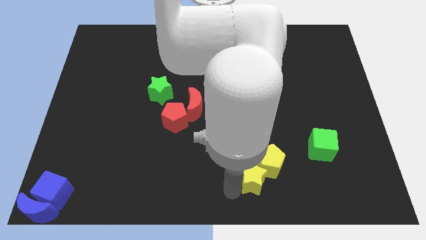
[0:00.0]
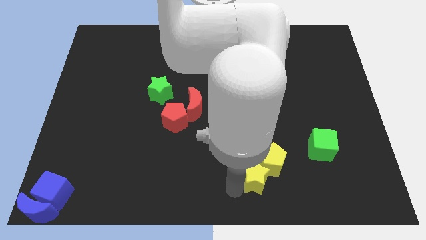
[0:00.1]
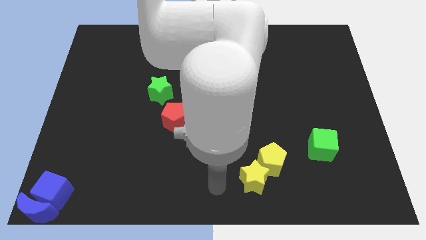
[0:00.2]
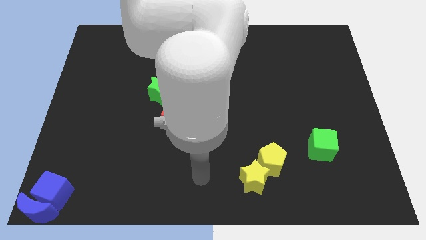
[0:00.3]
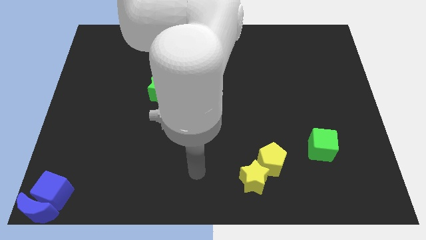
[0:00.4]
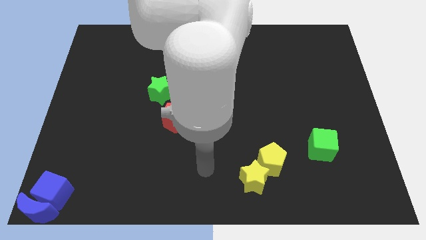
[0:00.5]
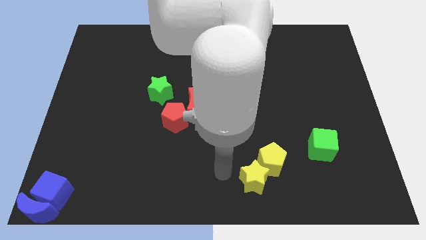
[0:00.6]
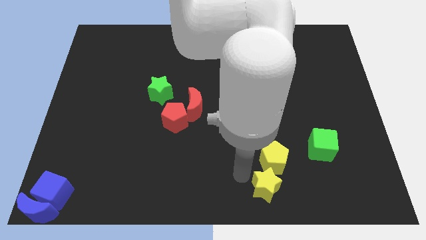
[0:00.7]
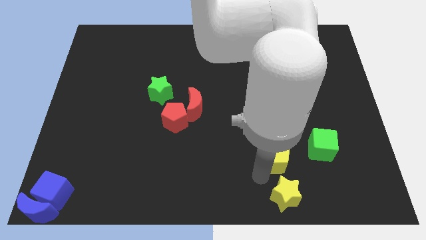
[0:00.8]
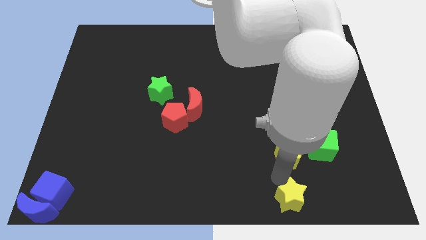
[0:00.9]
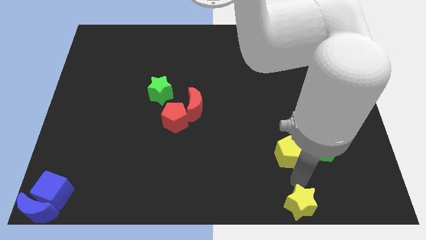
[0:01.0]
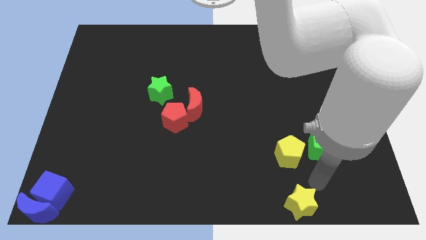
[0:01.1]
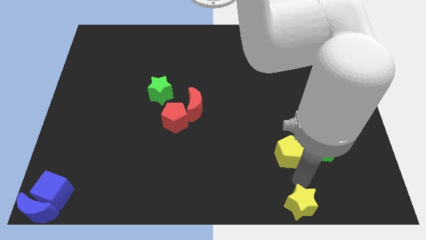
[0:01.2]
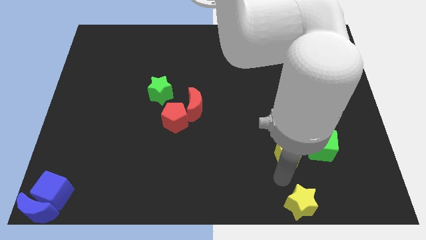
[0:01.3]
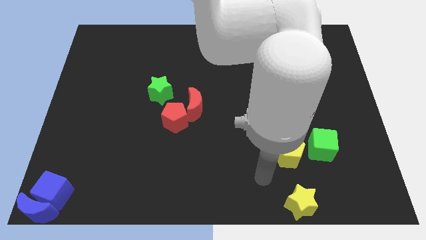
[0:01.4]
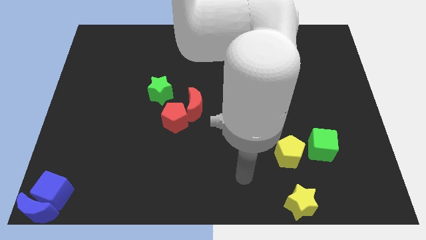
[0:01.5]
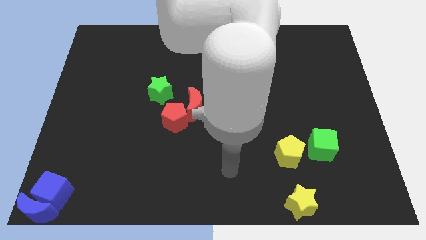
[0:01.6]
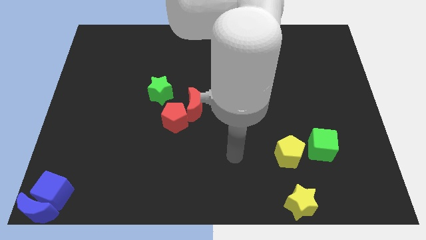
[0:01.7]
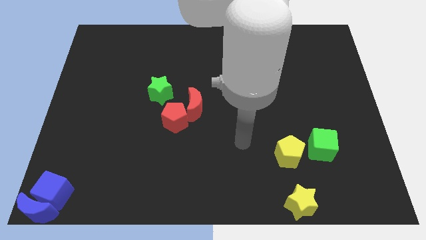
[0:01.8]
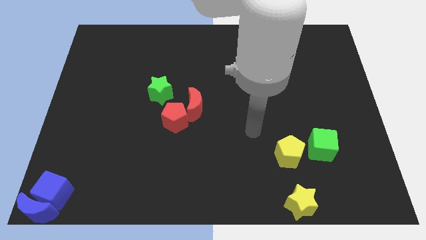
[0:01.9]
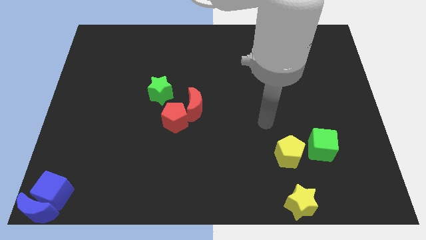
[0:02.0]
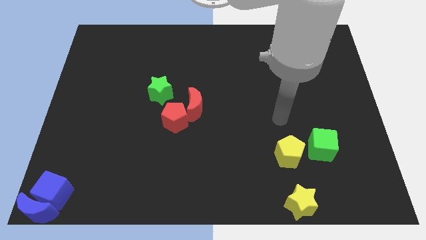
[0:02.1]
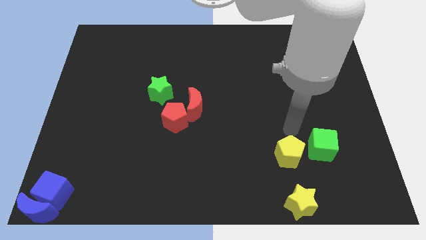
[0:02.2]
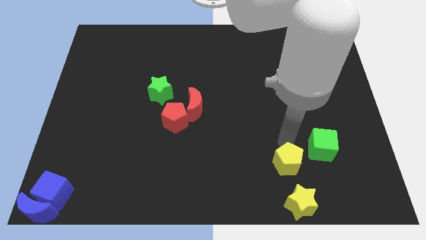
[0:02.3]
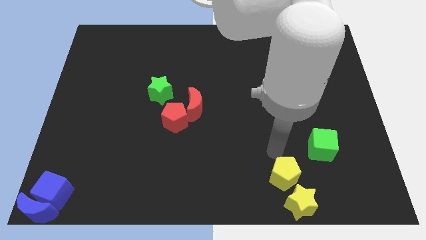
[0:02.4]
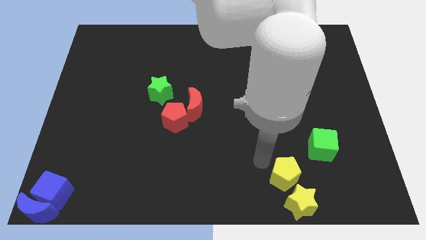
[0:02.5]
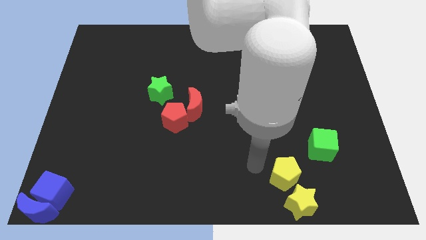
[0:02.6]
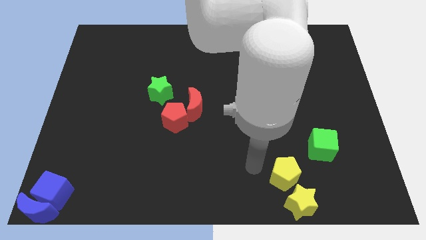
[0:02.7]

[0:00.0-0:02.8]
push the yellow pentagon into the yellow star

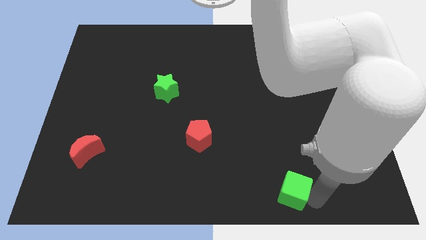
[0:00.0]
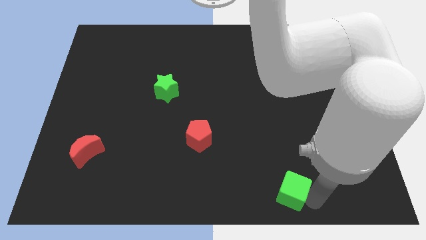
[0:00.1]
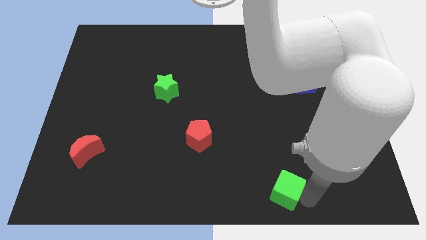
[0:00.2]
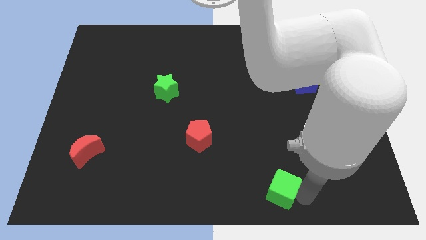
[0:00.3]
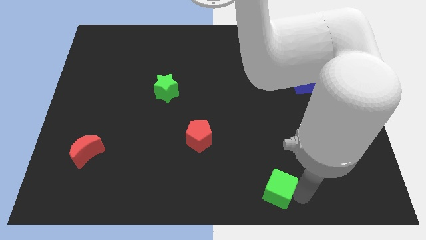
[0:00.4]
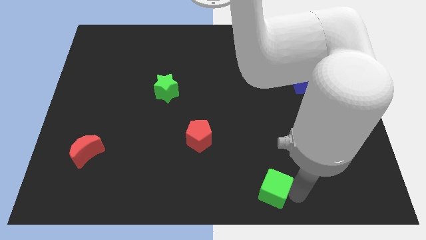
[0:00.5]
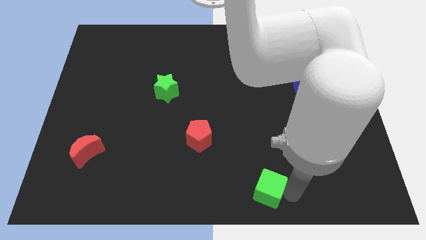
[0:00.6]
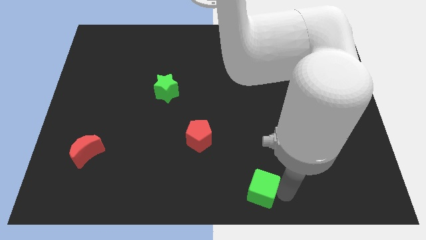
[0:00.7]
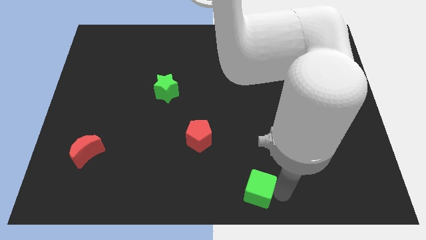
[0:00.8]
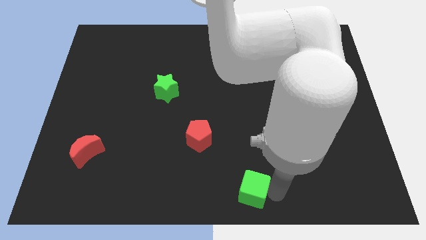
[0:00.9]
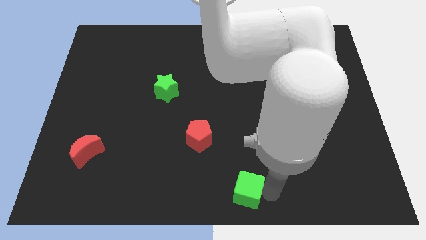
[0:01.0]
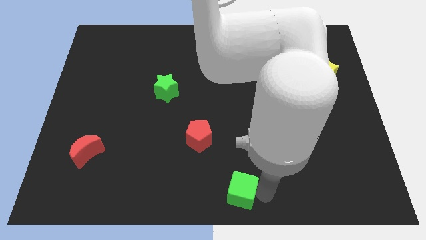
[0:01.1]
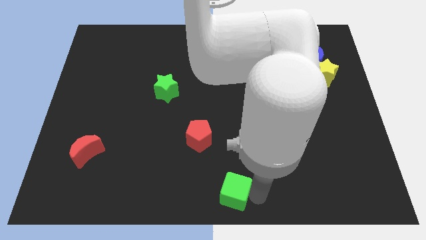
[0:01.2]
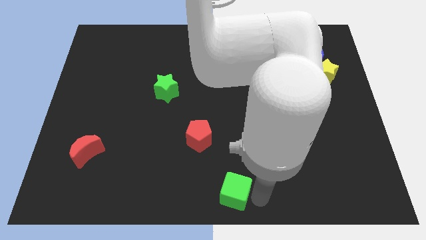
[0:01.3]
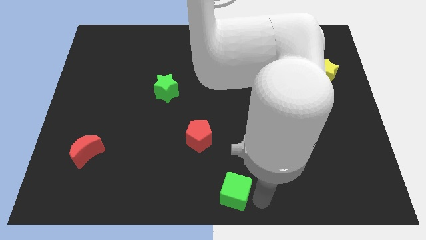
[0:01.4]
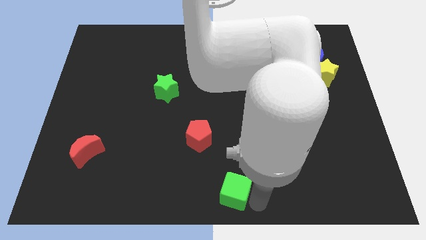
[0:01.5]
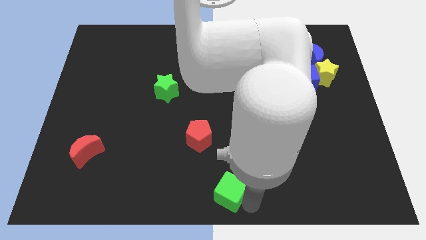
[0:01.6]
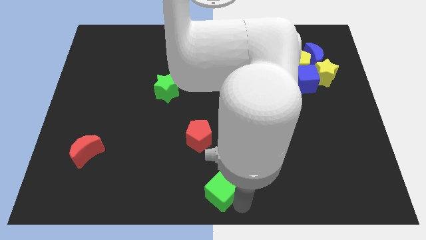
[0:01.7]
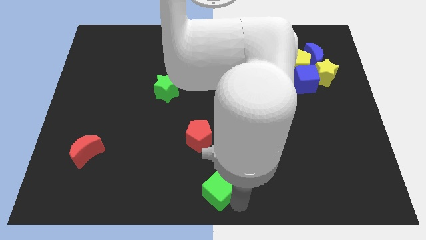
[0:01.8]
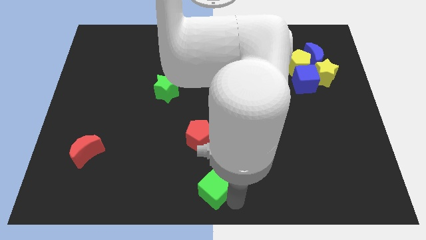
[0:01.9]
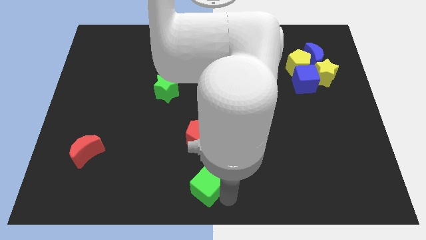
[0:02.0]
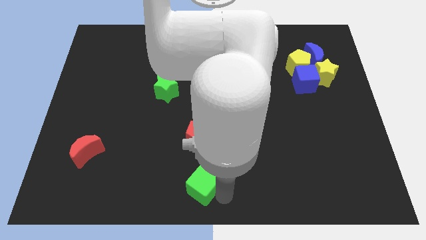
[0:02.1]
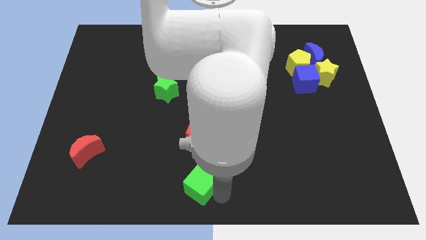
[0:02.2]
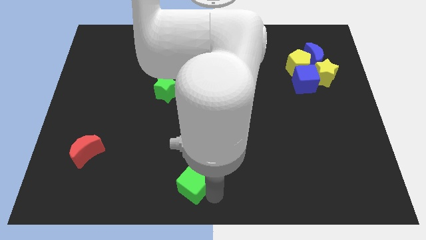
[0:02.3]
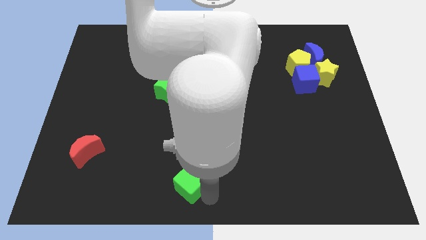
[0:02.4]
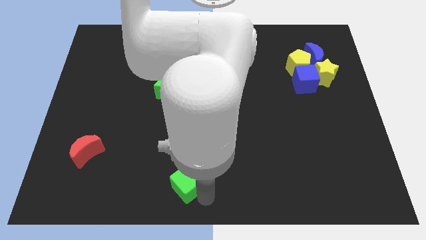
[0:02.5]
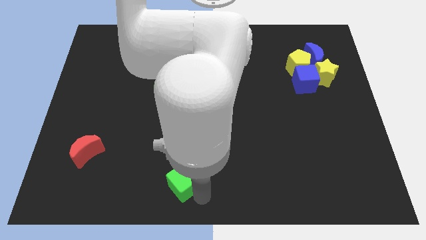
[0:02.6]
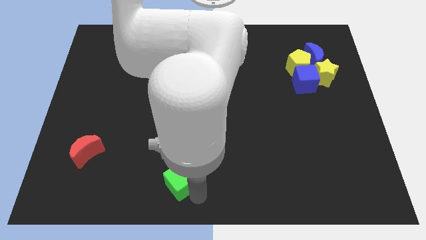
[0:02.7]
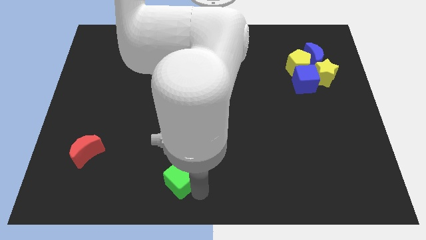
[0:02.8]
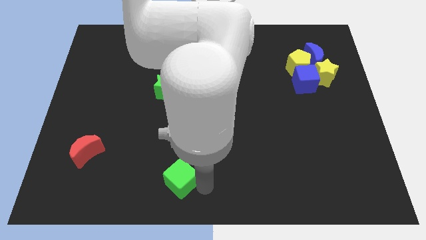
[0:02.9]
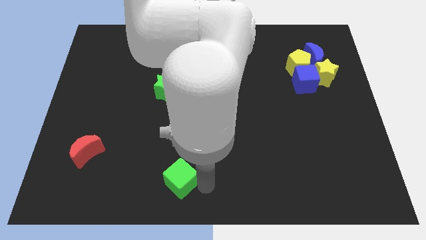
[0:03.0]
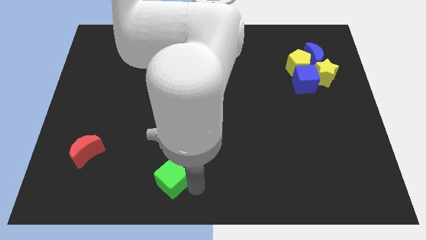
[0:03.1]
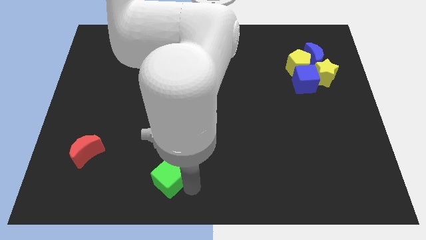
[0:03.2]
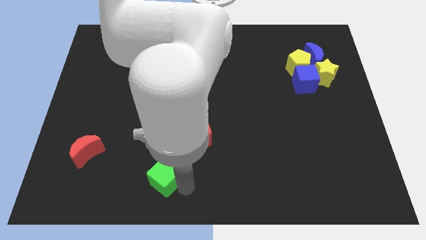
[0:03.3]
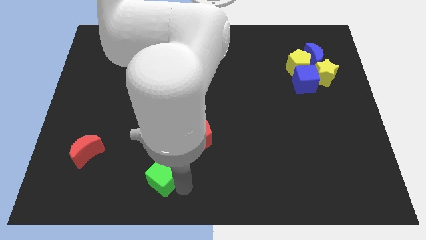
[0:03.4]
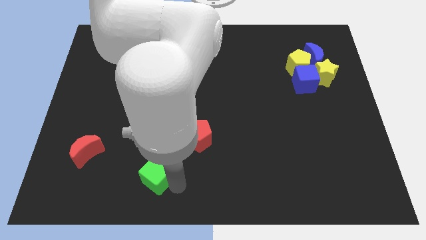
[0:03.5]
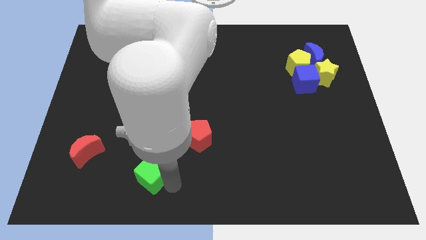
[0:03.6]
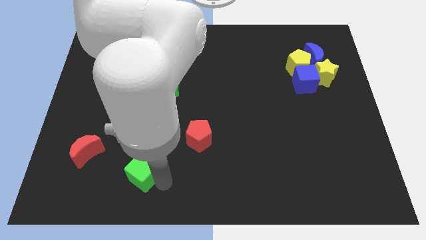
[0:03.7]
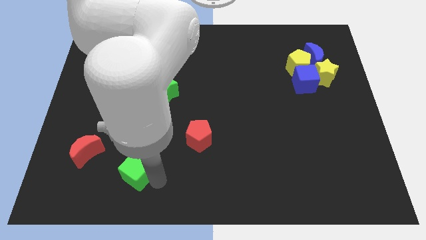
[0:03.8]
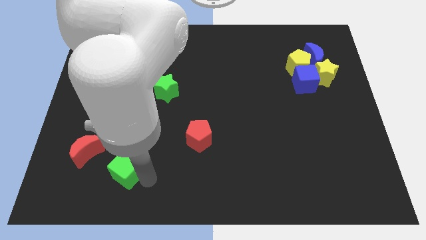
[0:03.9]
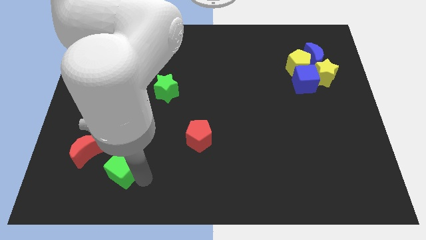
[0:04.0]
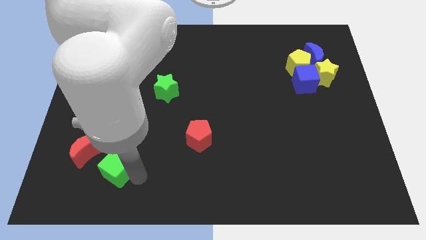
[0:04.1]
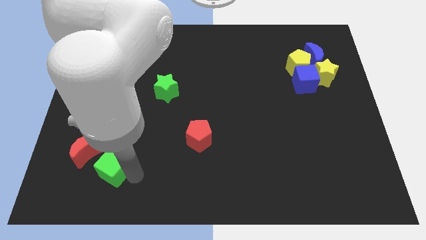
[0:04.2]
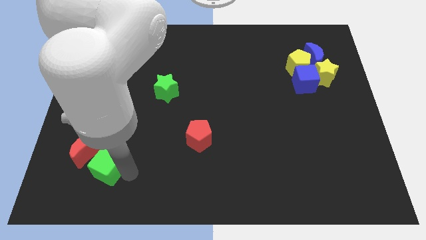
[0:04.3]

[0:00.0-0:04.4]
move the green cube close to the red moon

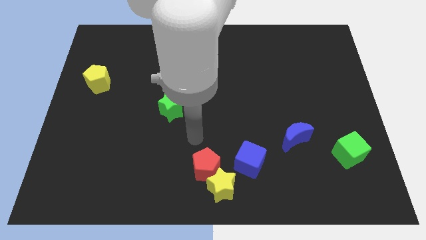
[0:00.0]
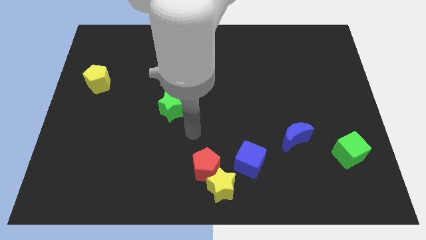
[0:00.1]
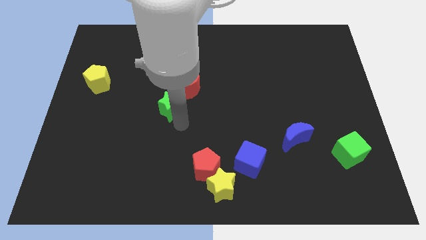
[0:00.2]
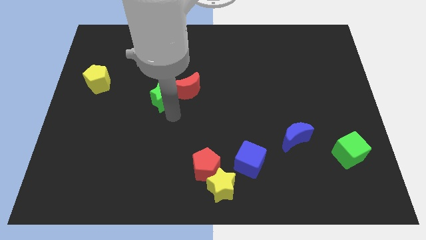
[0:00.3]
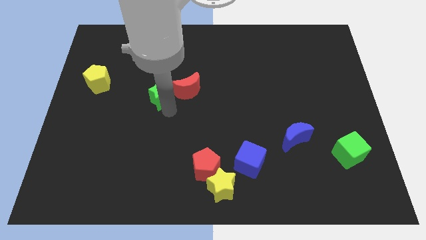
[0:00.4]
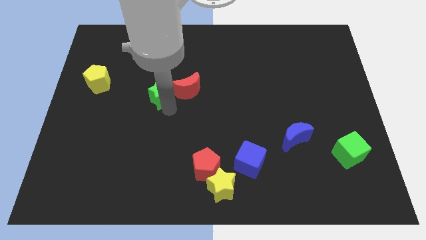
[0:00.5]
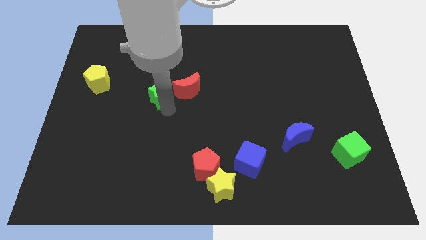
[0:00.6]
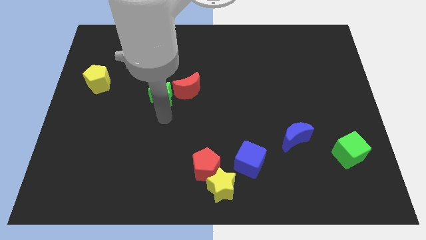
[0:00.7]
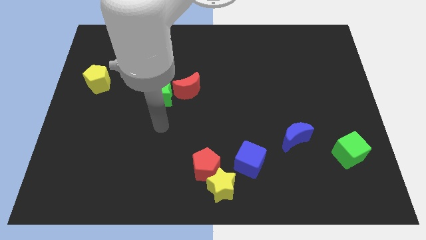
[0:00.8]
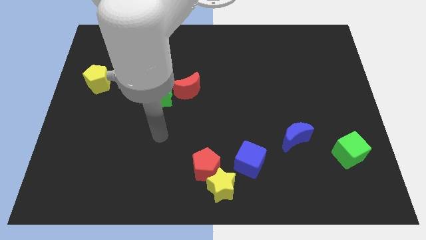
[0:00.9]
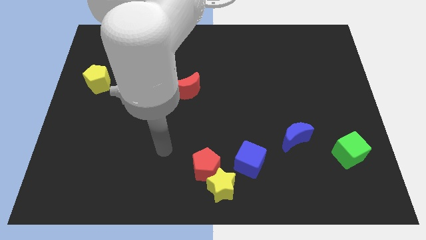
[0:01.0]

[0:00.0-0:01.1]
place the green star left to red crescent

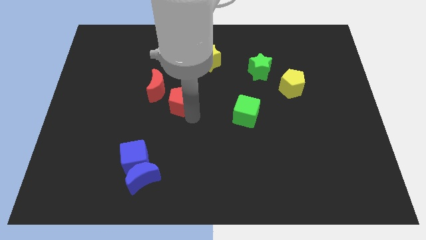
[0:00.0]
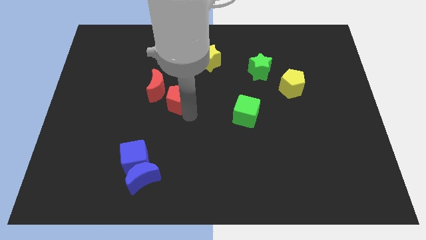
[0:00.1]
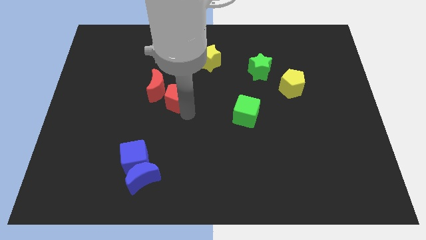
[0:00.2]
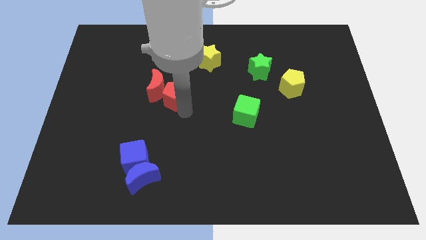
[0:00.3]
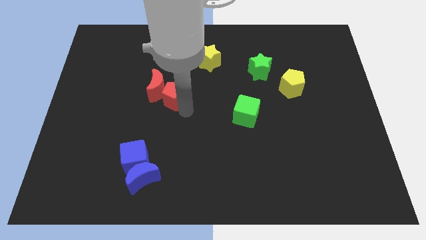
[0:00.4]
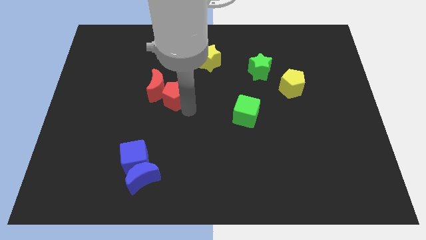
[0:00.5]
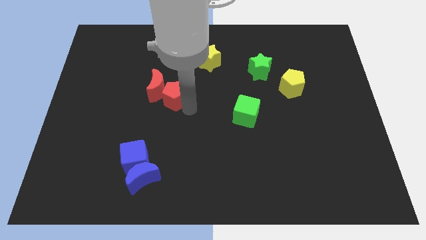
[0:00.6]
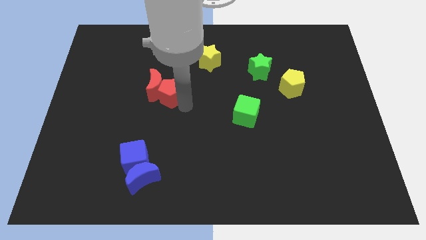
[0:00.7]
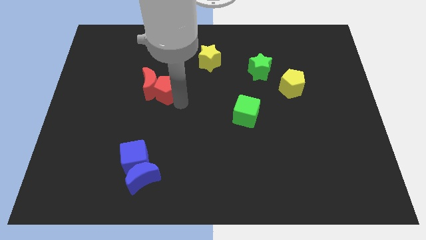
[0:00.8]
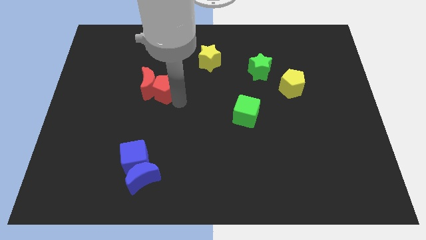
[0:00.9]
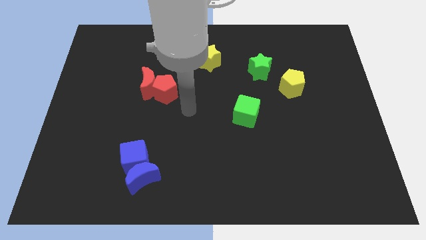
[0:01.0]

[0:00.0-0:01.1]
push the red pentagon into the red moon
